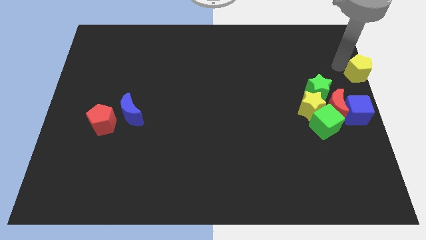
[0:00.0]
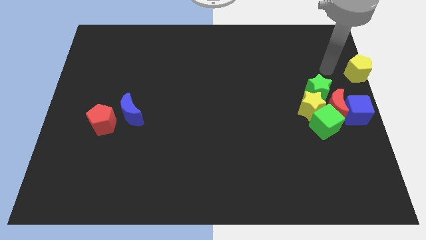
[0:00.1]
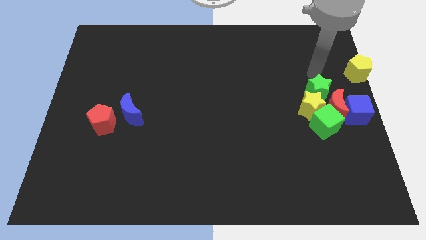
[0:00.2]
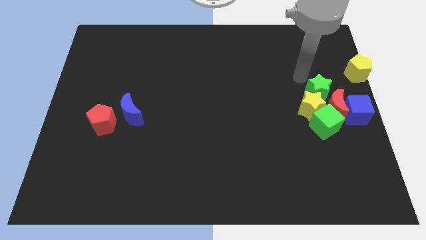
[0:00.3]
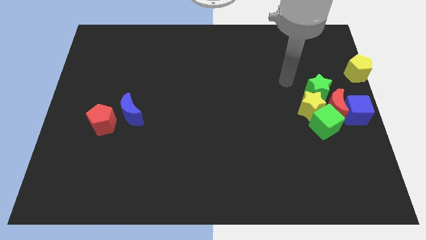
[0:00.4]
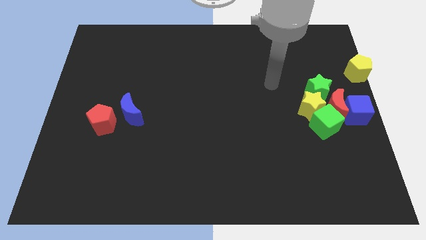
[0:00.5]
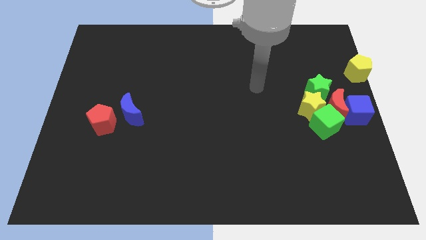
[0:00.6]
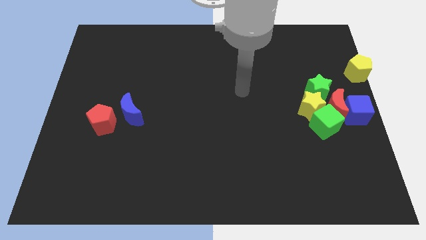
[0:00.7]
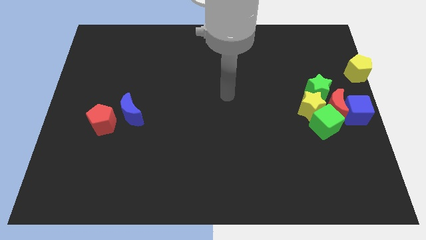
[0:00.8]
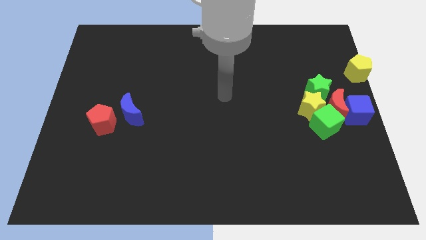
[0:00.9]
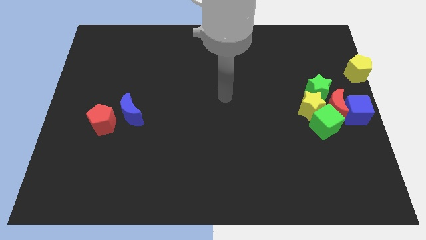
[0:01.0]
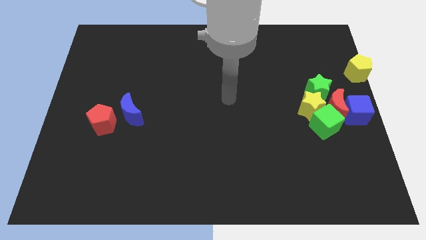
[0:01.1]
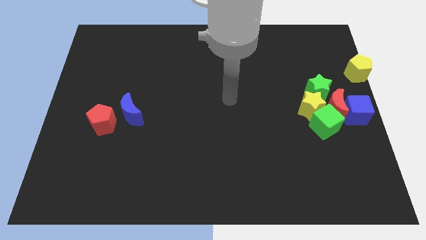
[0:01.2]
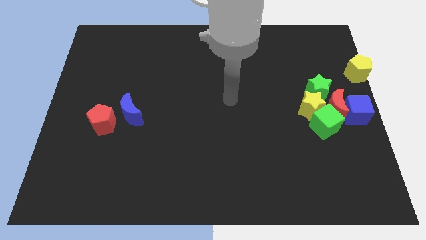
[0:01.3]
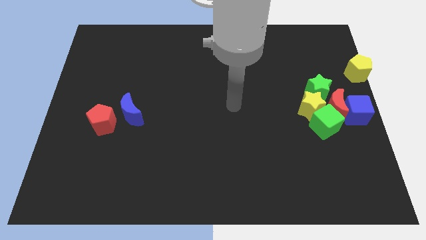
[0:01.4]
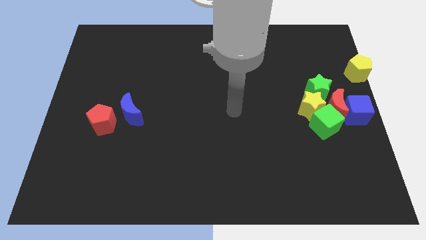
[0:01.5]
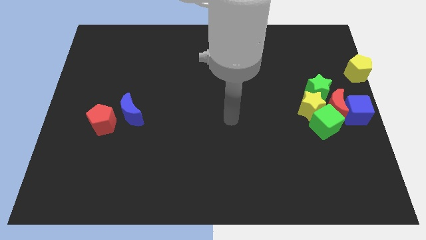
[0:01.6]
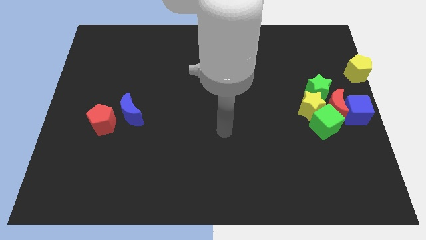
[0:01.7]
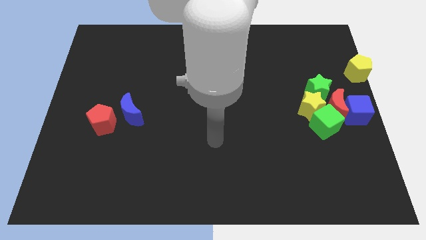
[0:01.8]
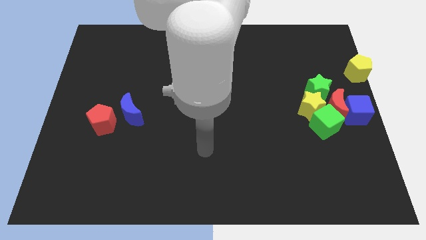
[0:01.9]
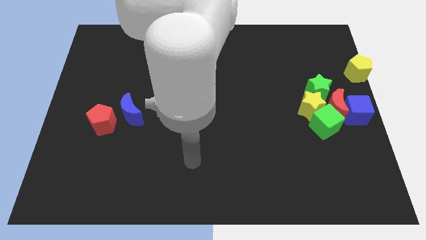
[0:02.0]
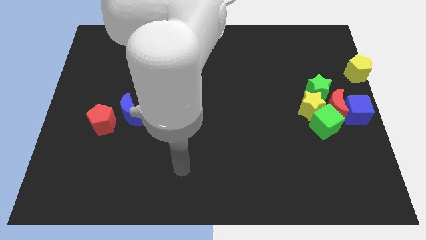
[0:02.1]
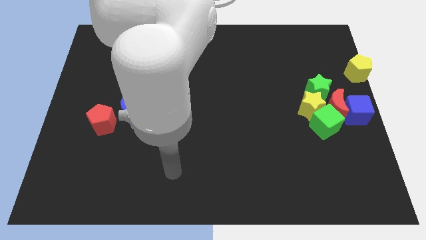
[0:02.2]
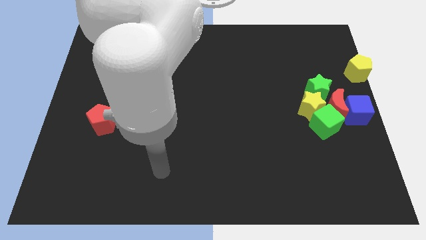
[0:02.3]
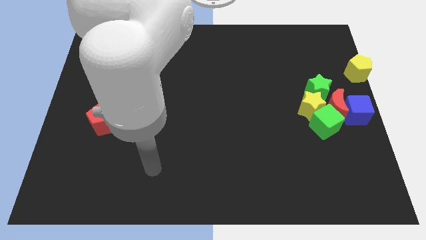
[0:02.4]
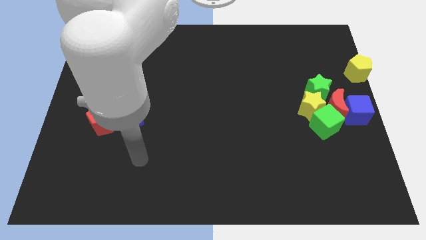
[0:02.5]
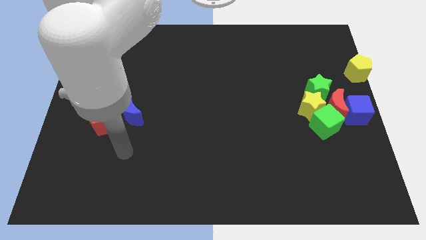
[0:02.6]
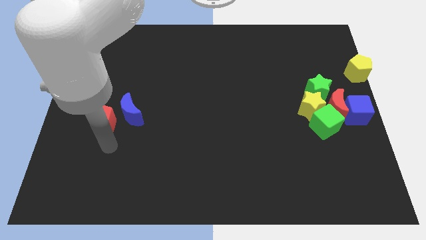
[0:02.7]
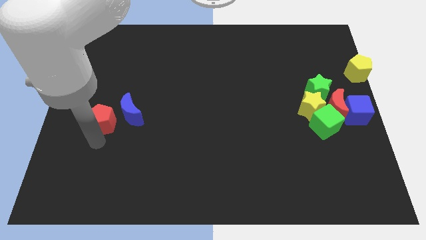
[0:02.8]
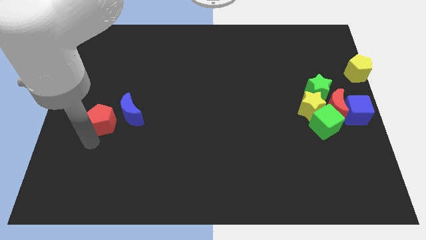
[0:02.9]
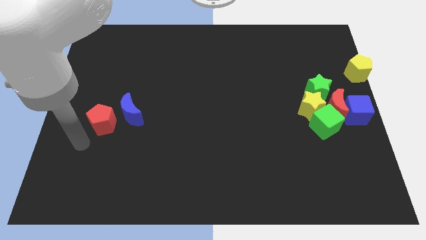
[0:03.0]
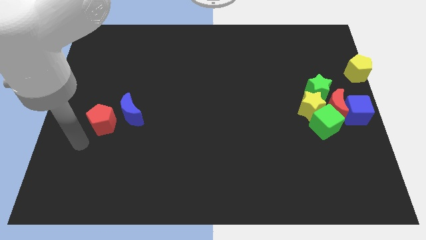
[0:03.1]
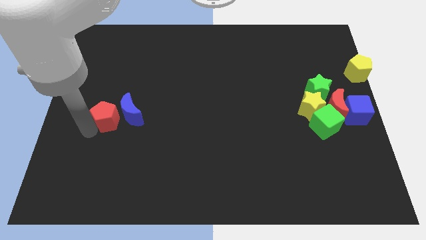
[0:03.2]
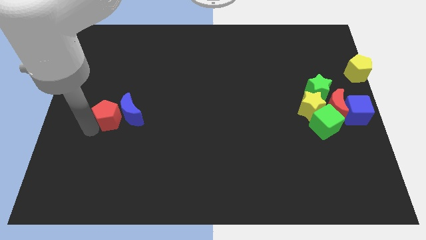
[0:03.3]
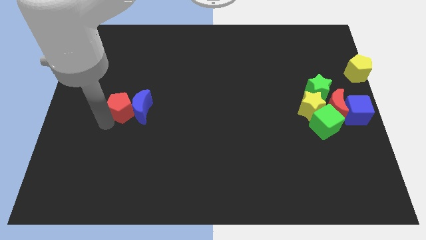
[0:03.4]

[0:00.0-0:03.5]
go away from the group of blocks

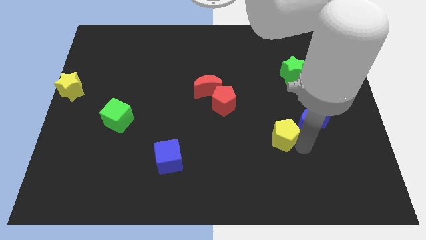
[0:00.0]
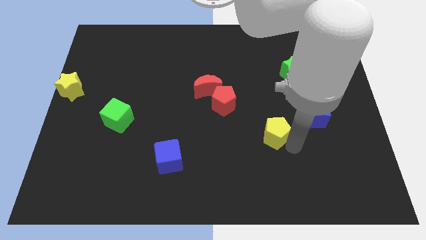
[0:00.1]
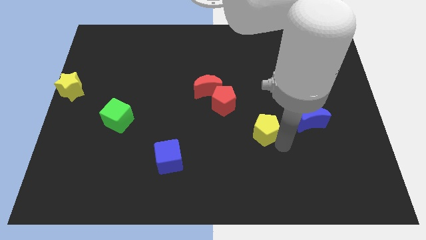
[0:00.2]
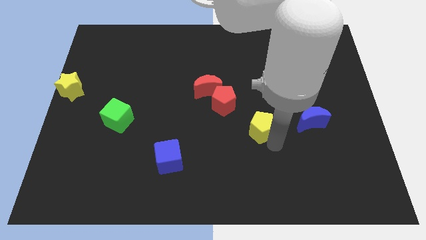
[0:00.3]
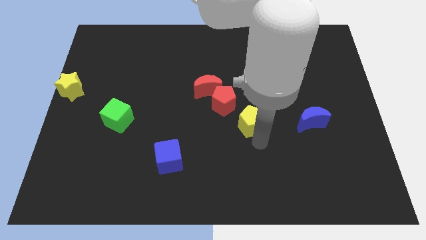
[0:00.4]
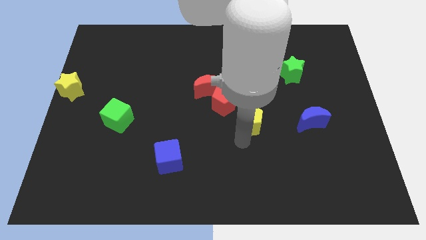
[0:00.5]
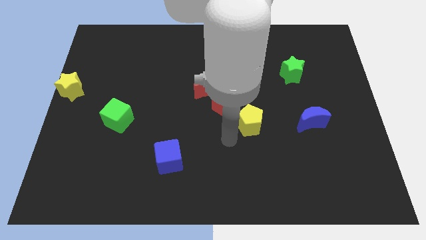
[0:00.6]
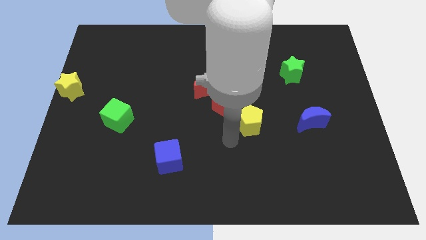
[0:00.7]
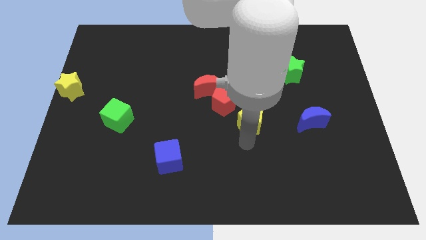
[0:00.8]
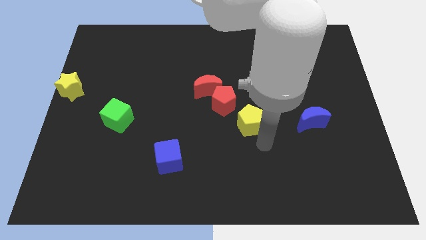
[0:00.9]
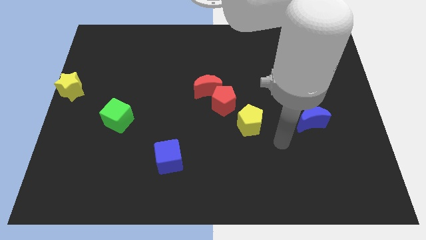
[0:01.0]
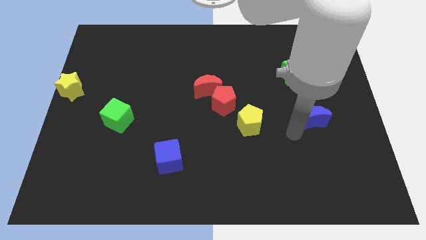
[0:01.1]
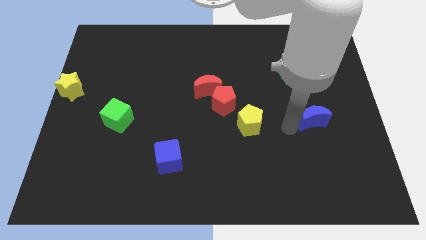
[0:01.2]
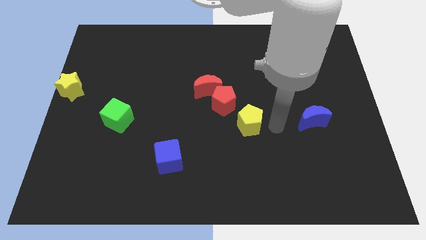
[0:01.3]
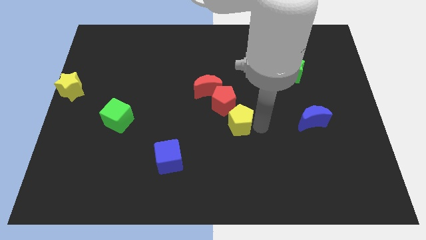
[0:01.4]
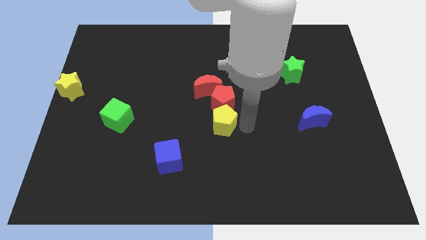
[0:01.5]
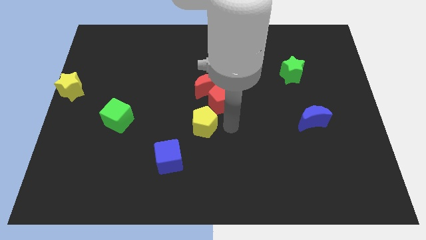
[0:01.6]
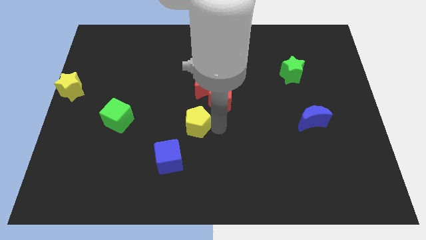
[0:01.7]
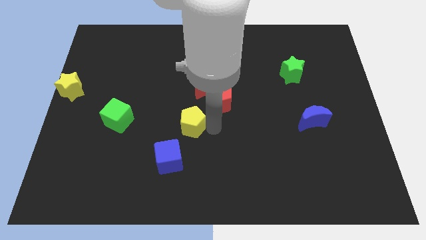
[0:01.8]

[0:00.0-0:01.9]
push the yellow pentagon in between the red pentagon and blue cube

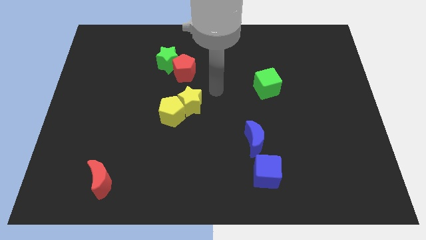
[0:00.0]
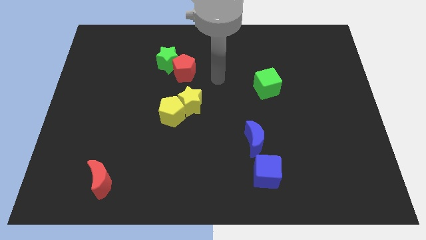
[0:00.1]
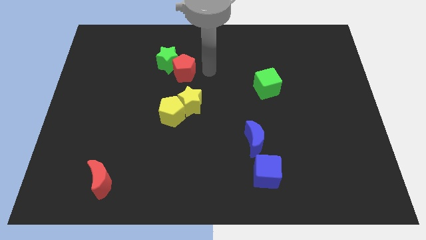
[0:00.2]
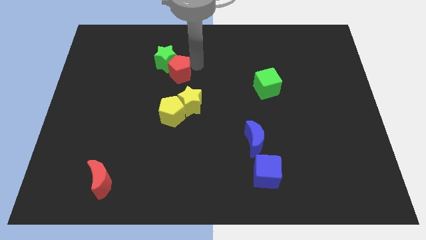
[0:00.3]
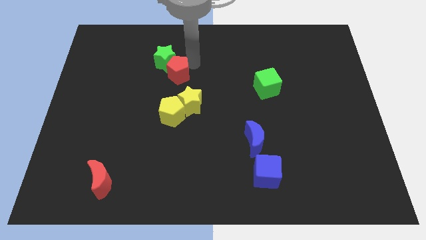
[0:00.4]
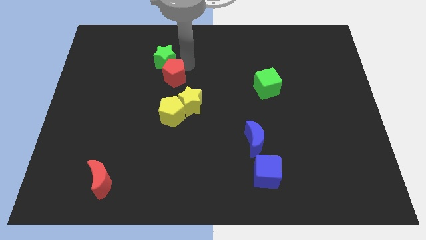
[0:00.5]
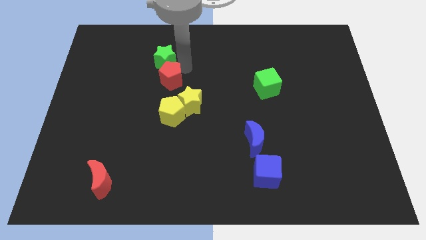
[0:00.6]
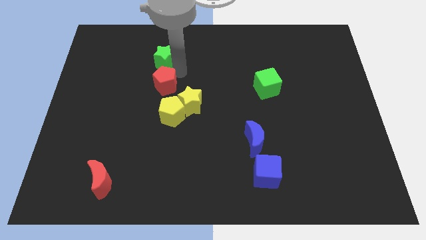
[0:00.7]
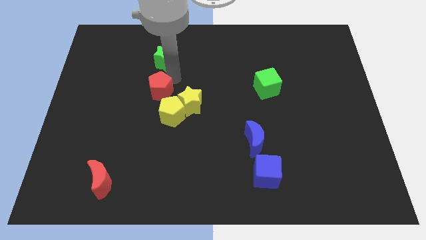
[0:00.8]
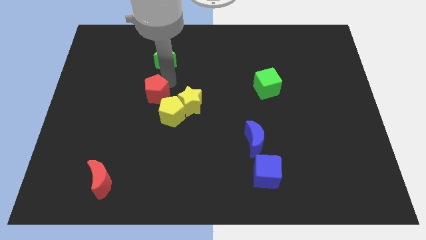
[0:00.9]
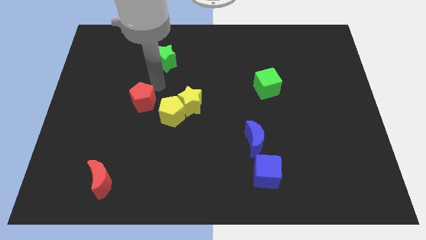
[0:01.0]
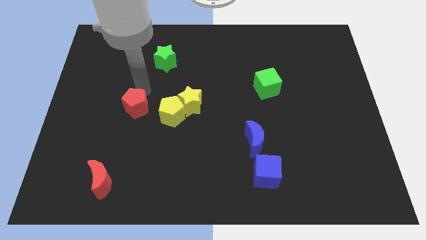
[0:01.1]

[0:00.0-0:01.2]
separate the red pentagon and green star

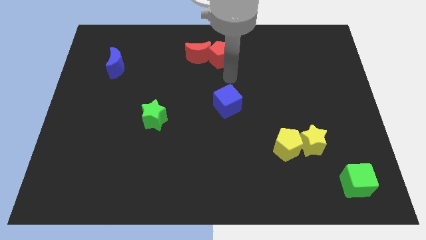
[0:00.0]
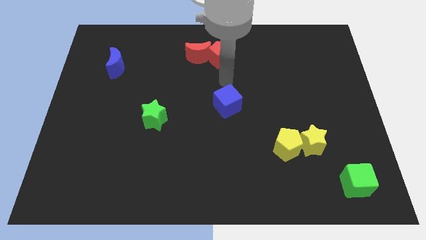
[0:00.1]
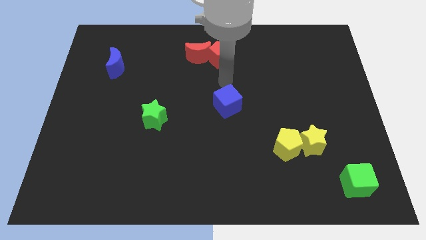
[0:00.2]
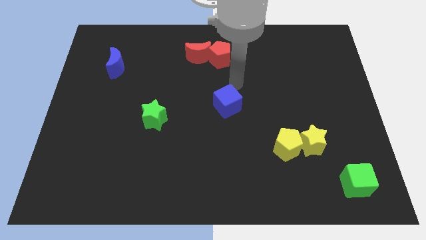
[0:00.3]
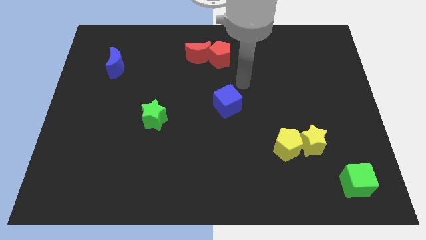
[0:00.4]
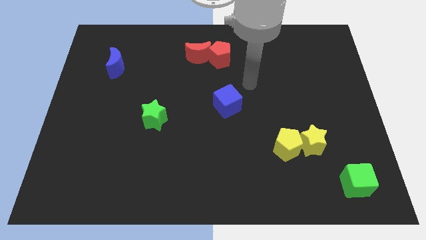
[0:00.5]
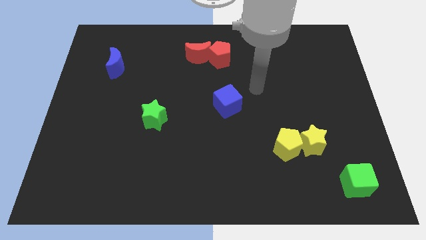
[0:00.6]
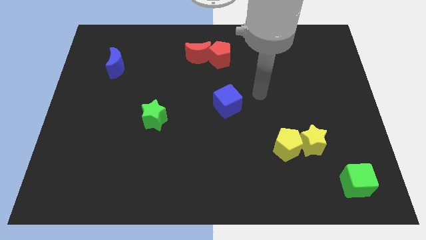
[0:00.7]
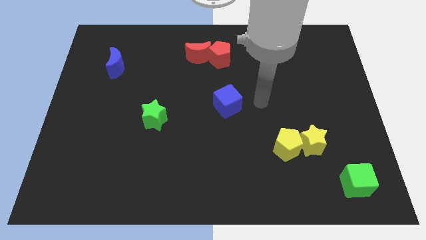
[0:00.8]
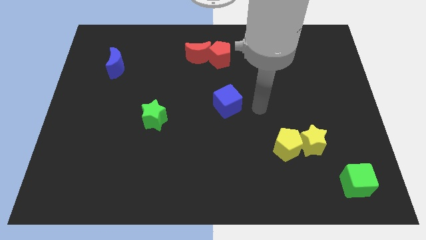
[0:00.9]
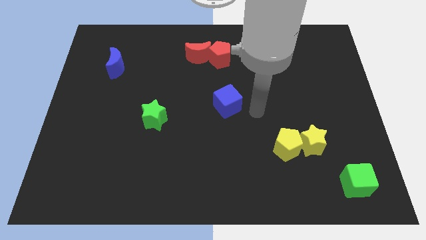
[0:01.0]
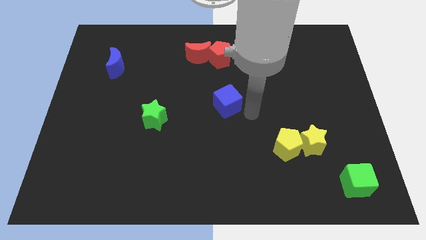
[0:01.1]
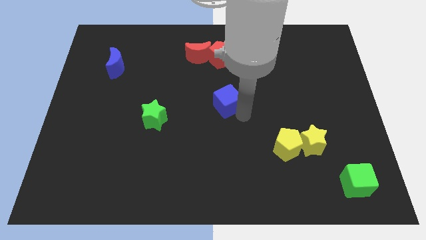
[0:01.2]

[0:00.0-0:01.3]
point your arm to the bottom right side of the blue cube

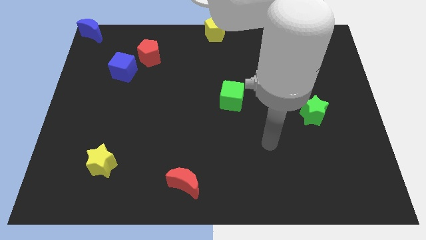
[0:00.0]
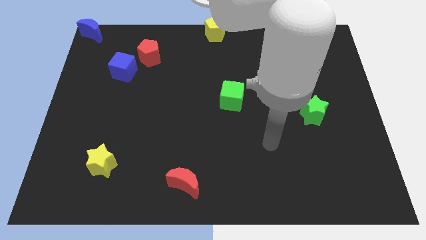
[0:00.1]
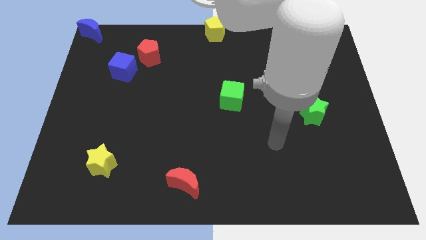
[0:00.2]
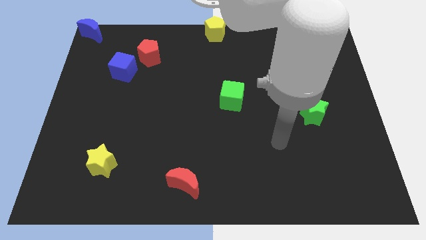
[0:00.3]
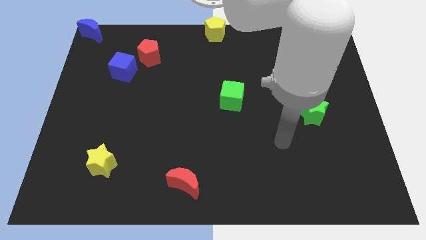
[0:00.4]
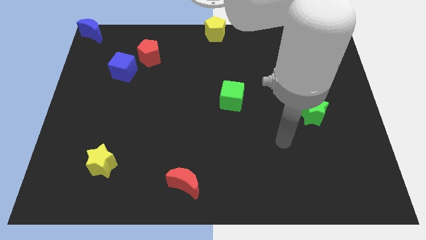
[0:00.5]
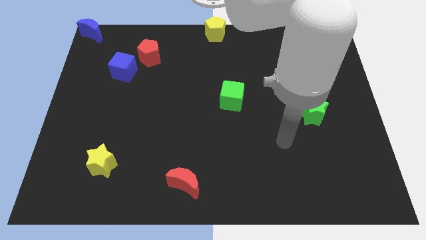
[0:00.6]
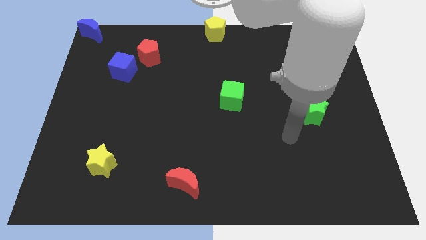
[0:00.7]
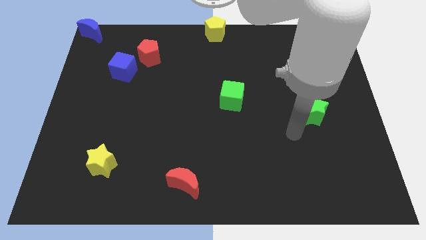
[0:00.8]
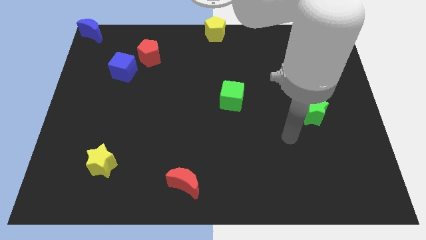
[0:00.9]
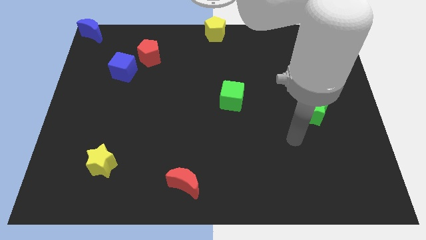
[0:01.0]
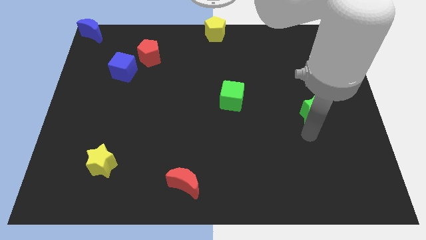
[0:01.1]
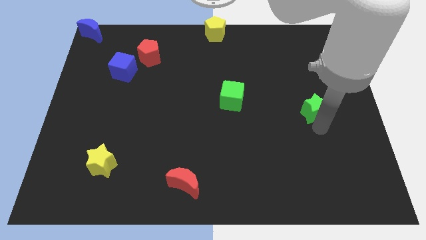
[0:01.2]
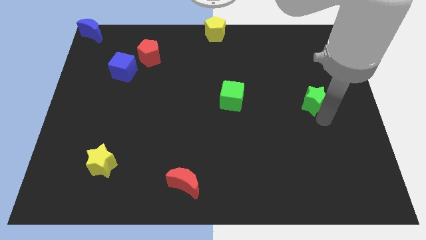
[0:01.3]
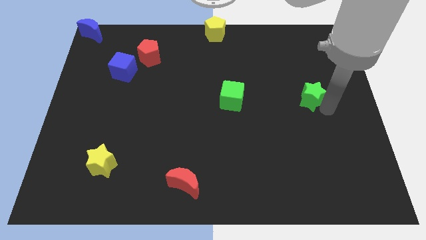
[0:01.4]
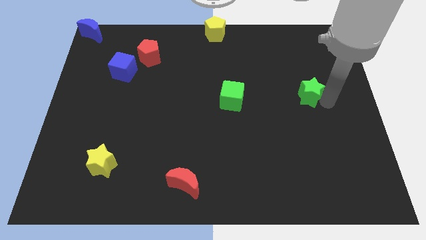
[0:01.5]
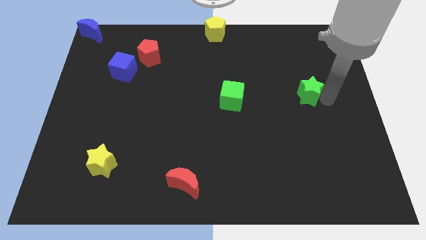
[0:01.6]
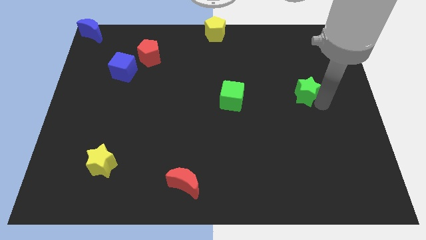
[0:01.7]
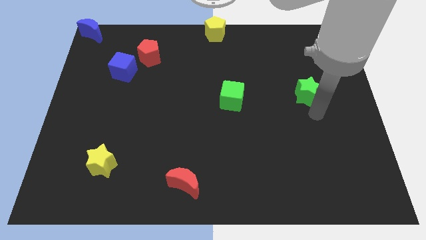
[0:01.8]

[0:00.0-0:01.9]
push the green star towards the top of the board
